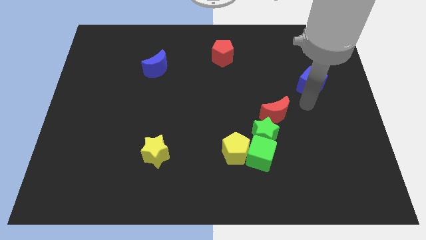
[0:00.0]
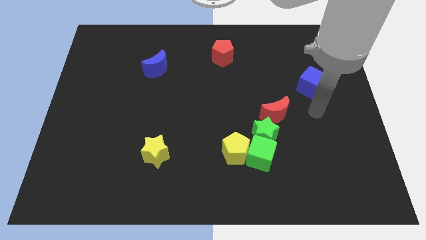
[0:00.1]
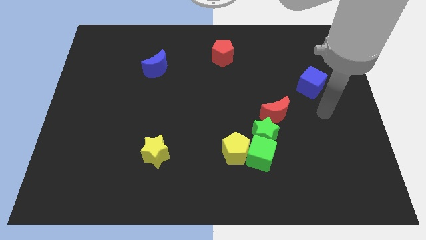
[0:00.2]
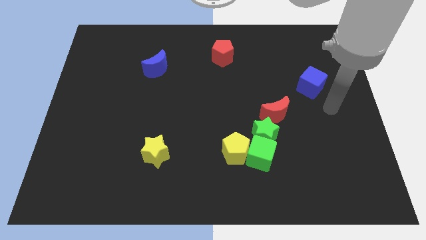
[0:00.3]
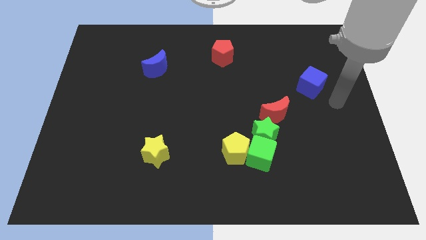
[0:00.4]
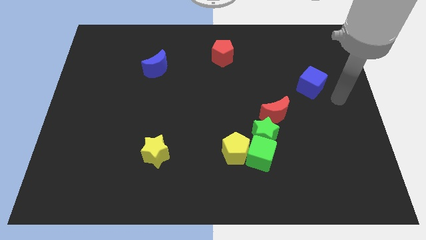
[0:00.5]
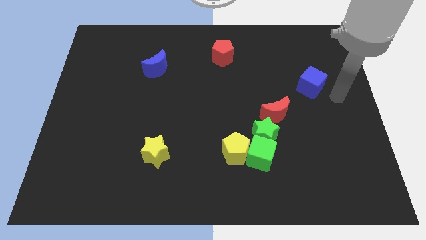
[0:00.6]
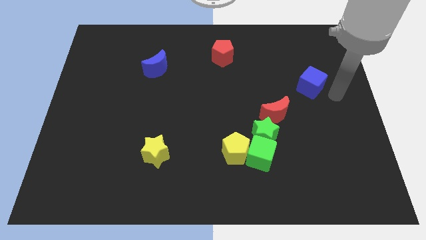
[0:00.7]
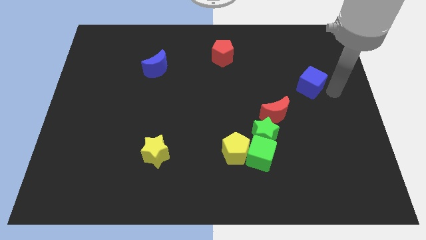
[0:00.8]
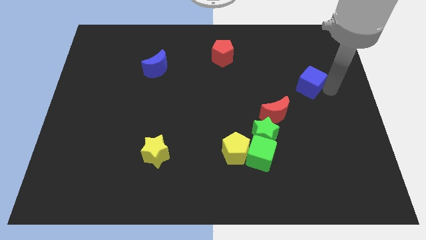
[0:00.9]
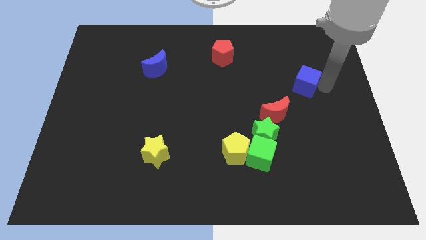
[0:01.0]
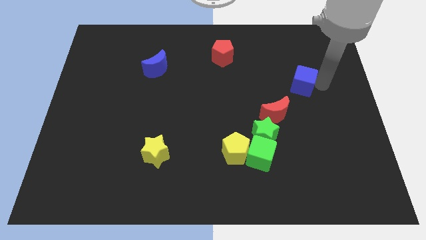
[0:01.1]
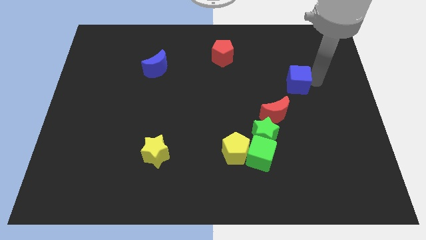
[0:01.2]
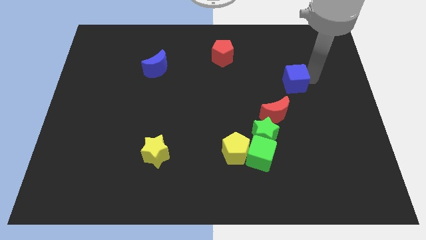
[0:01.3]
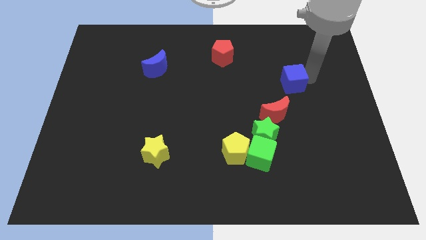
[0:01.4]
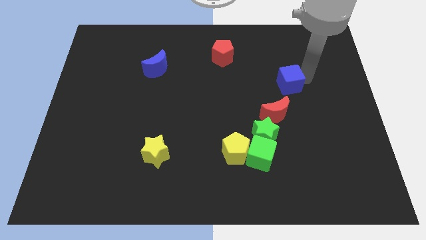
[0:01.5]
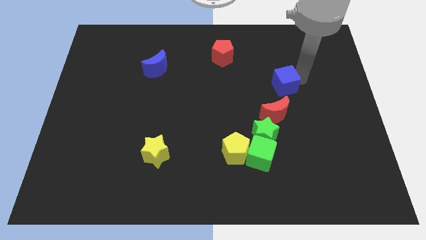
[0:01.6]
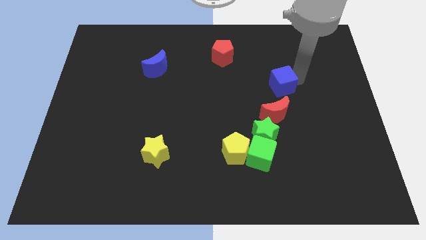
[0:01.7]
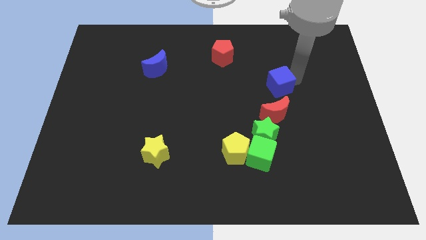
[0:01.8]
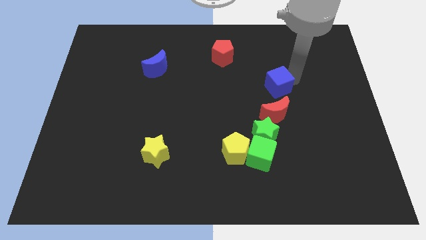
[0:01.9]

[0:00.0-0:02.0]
move the blue cube to the top of the red crescent

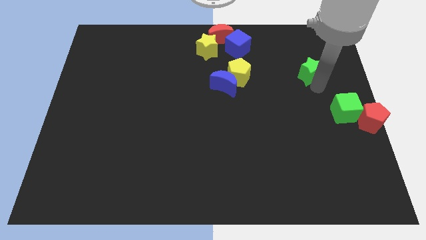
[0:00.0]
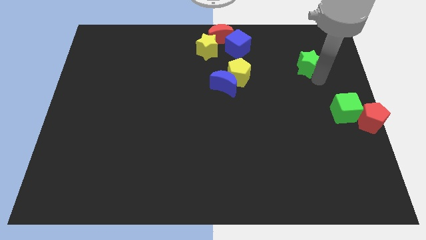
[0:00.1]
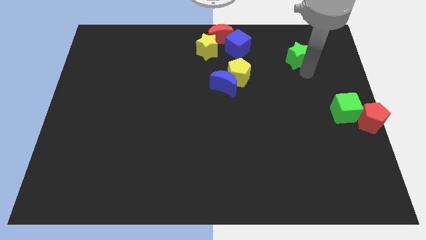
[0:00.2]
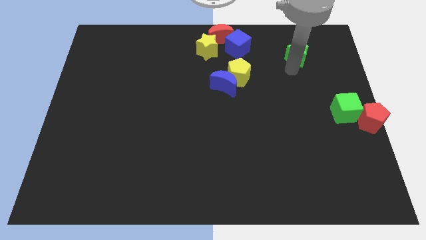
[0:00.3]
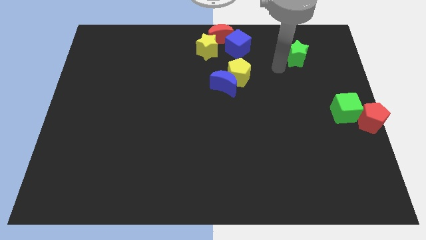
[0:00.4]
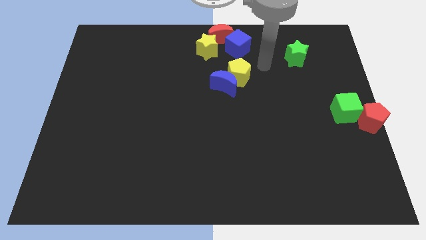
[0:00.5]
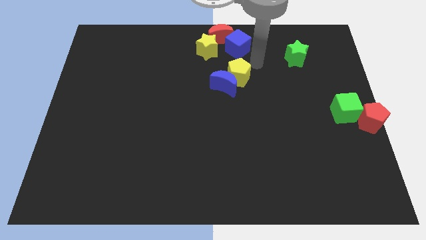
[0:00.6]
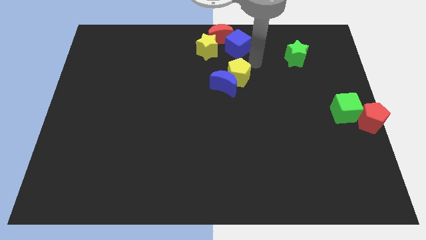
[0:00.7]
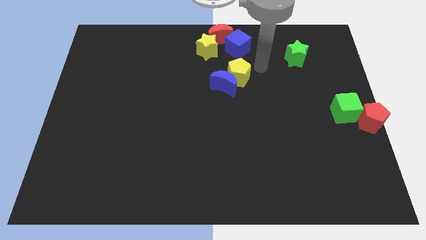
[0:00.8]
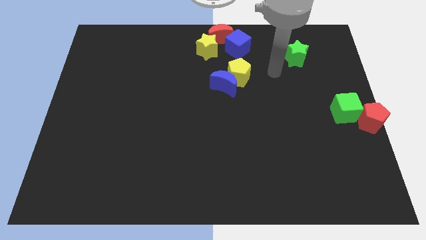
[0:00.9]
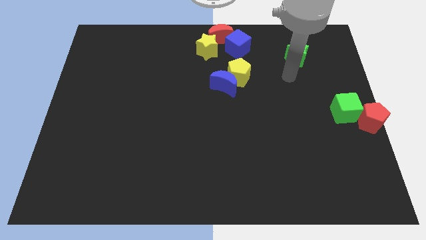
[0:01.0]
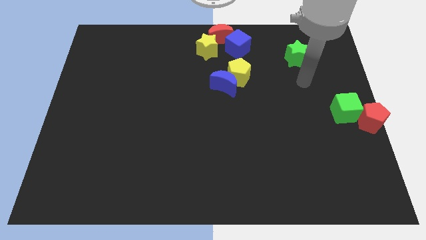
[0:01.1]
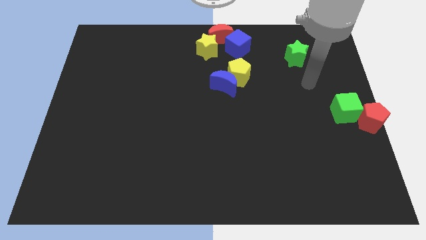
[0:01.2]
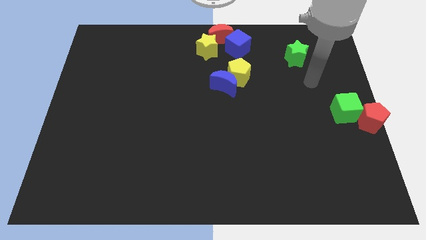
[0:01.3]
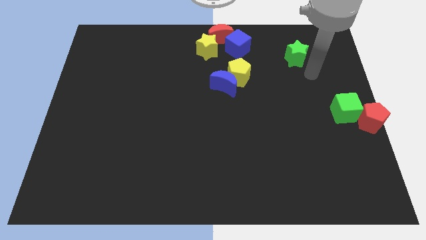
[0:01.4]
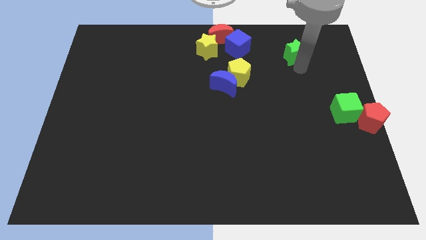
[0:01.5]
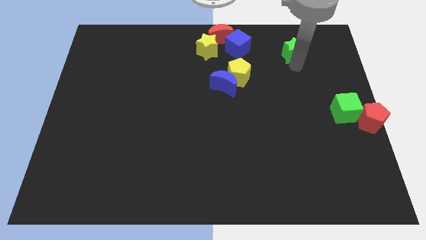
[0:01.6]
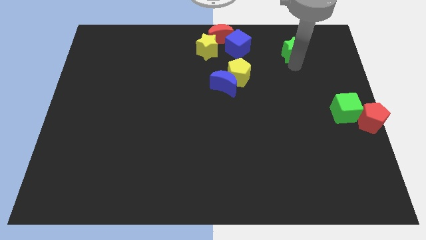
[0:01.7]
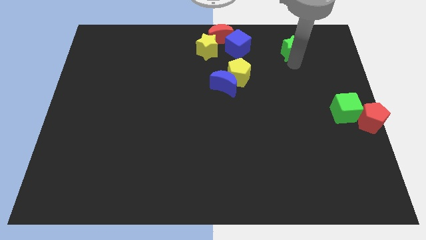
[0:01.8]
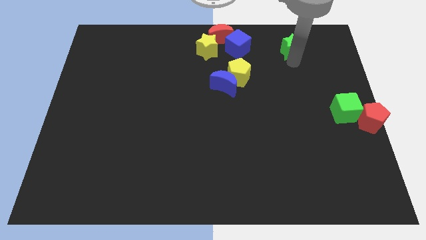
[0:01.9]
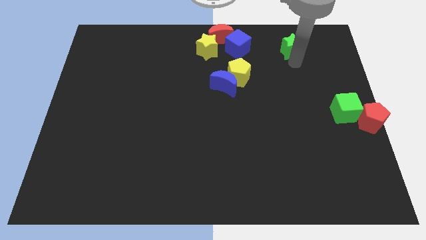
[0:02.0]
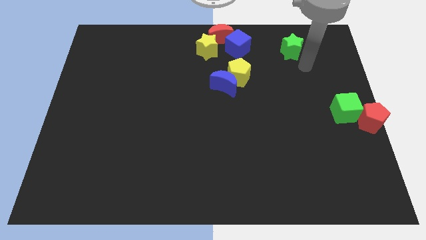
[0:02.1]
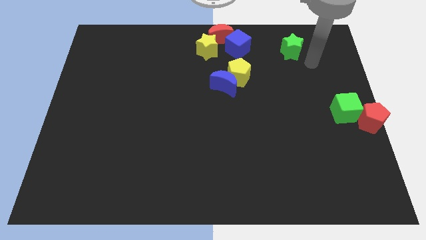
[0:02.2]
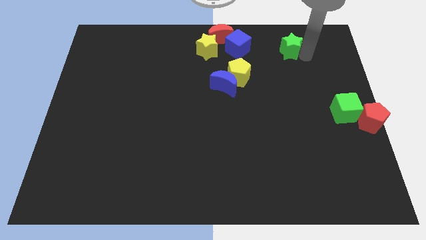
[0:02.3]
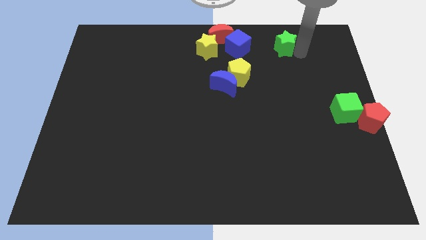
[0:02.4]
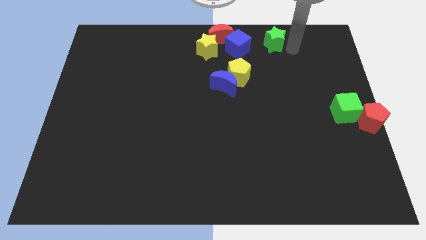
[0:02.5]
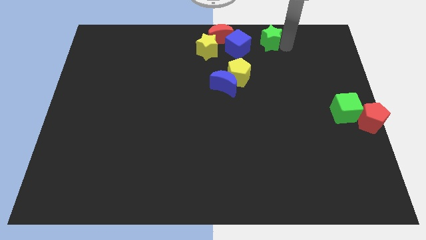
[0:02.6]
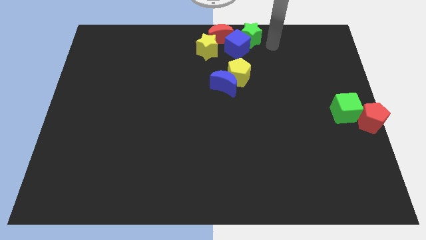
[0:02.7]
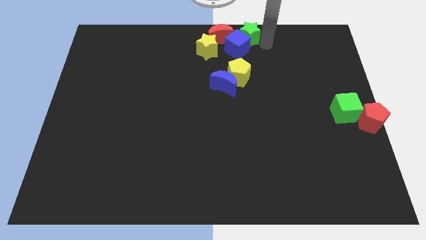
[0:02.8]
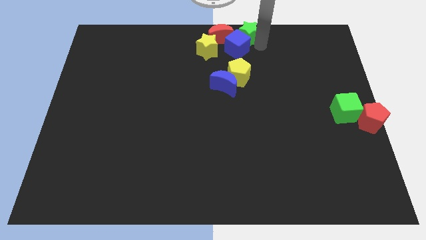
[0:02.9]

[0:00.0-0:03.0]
move the green star top right to the blue cube

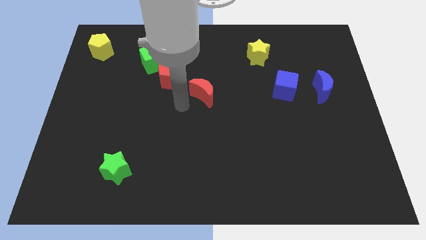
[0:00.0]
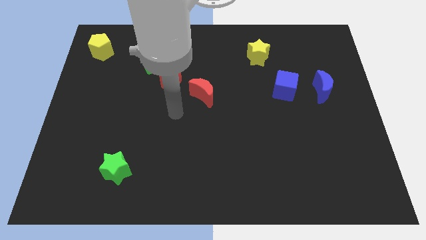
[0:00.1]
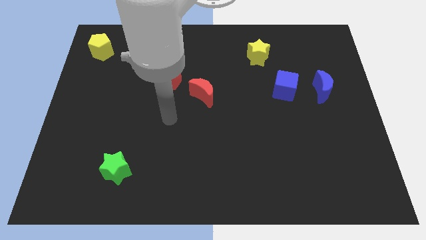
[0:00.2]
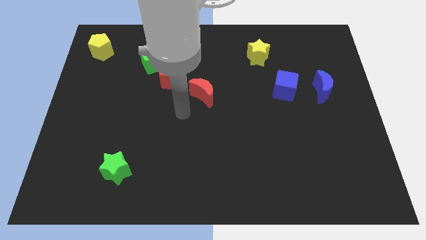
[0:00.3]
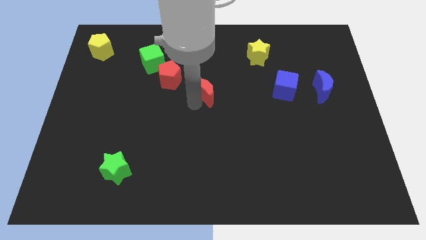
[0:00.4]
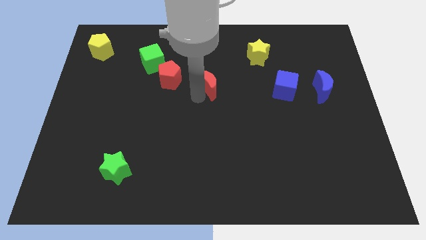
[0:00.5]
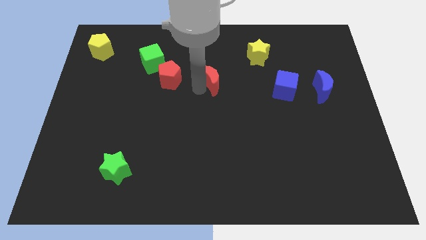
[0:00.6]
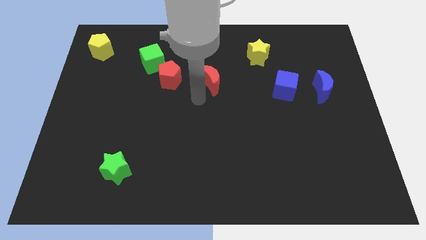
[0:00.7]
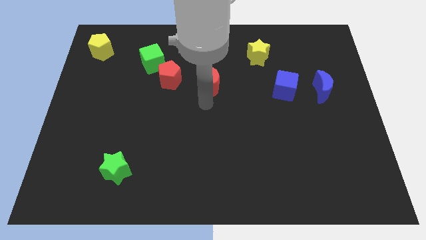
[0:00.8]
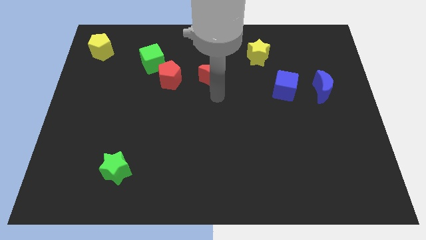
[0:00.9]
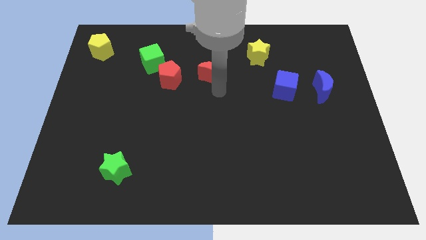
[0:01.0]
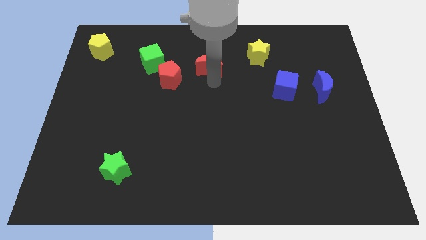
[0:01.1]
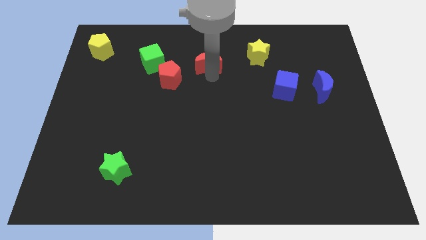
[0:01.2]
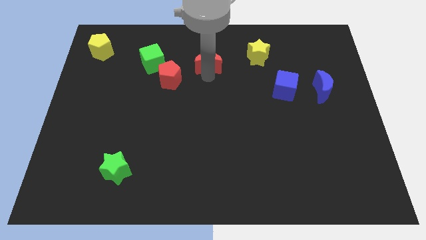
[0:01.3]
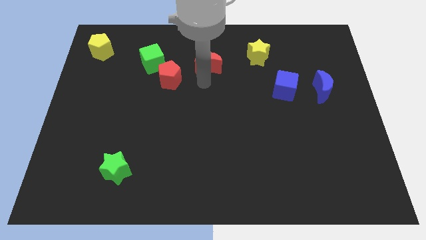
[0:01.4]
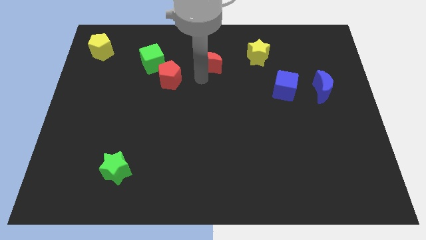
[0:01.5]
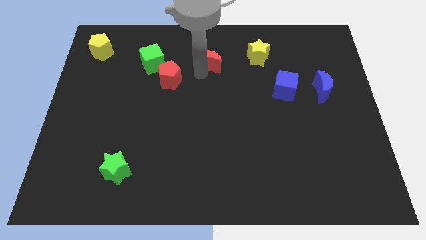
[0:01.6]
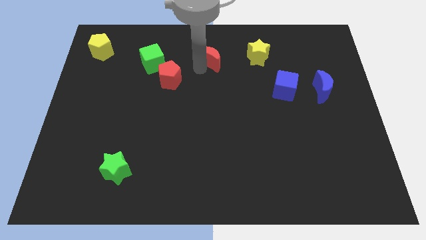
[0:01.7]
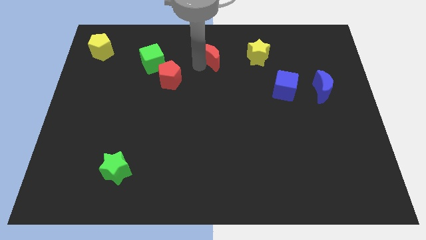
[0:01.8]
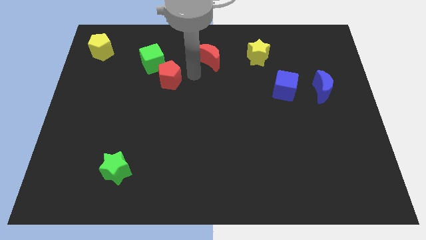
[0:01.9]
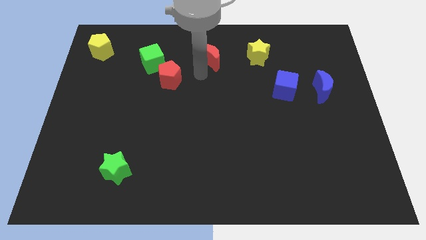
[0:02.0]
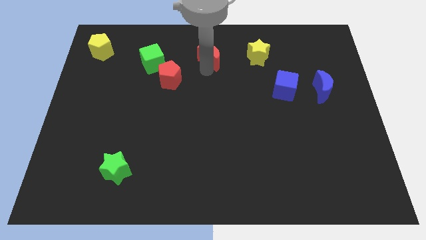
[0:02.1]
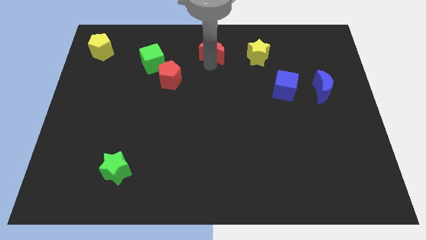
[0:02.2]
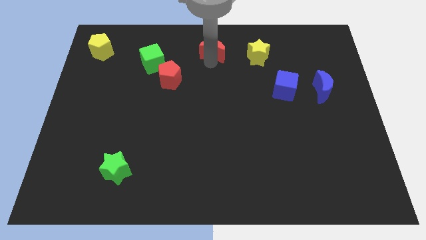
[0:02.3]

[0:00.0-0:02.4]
place the red crescent in between the yellow star and green cube

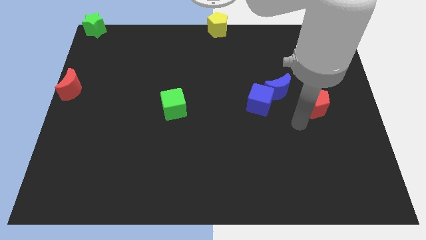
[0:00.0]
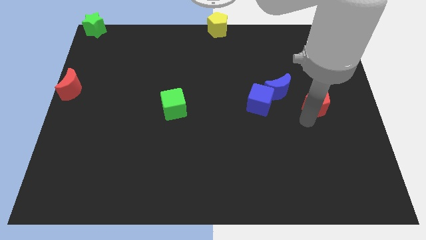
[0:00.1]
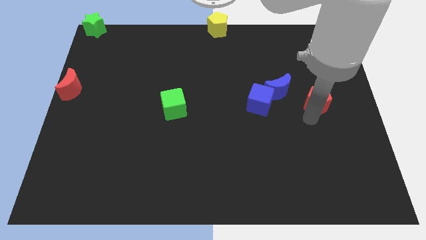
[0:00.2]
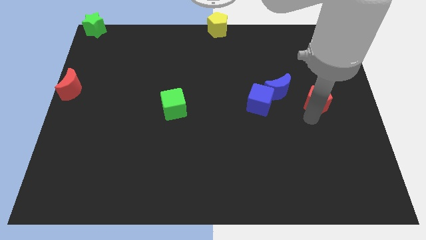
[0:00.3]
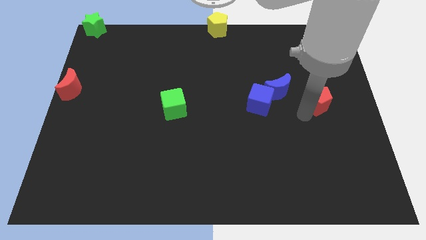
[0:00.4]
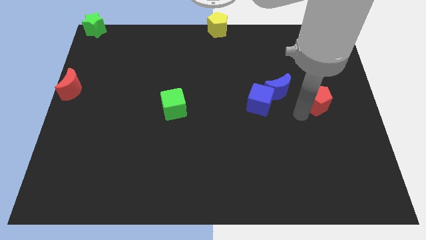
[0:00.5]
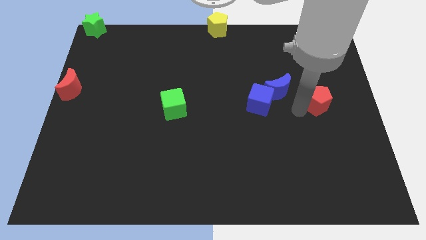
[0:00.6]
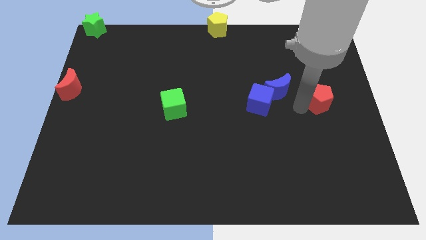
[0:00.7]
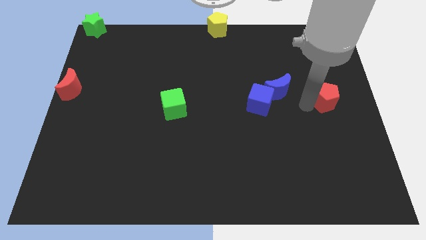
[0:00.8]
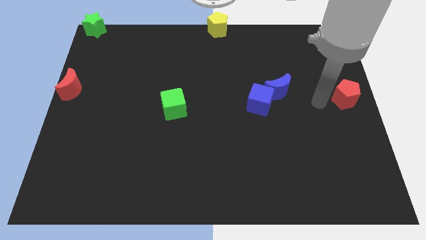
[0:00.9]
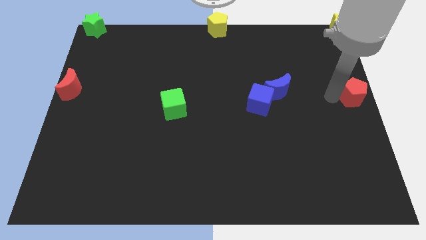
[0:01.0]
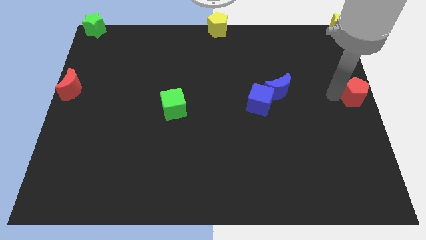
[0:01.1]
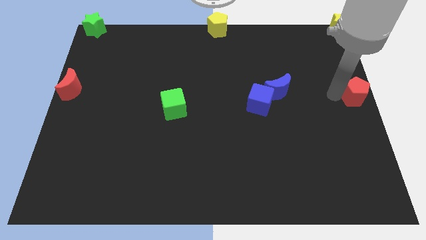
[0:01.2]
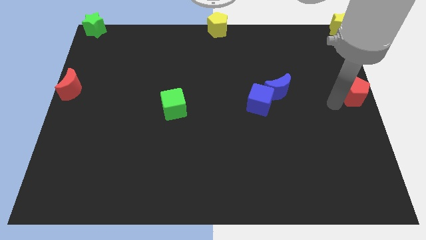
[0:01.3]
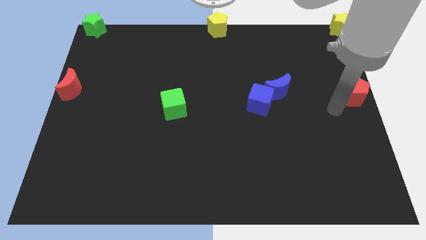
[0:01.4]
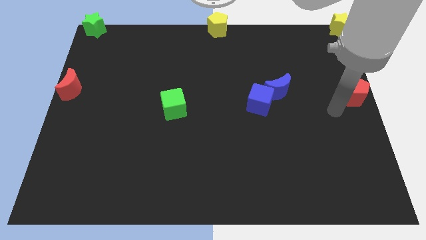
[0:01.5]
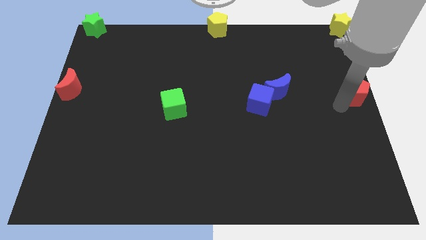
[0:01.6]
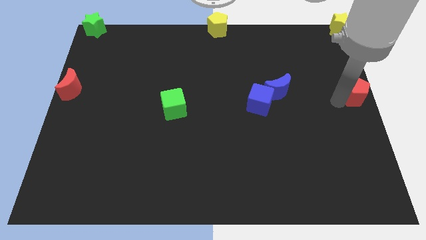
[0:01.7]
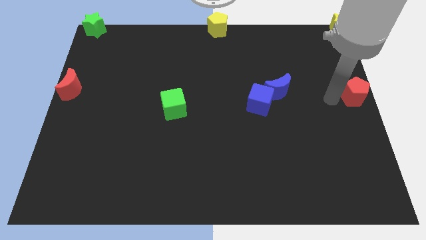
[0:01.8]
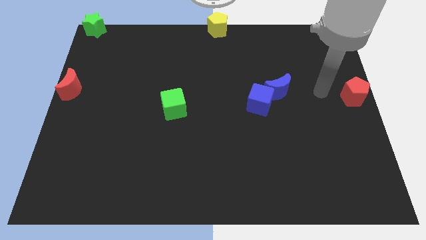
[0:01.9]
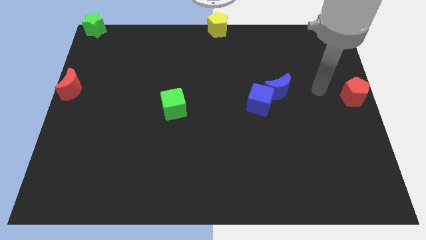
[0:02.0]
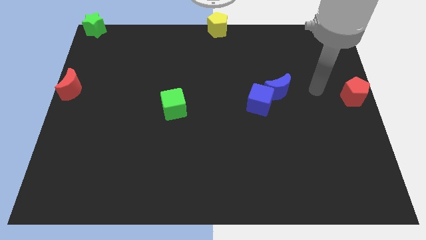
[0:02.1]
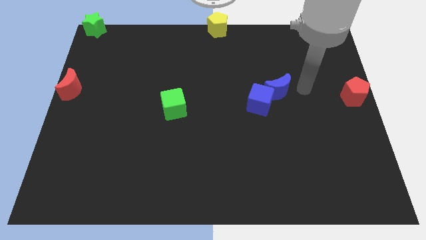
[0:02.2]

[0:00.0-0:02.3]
move the red pentagon to the left center of the board
